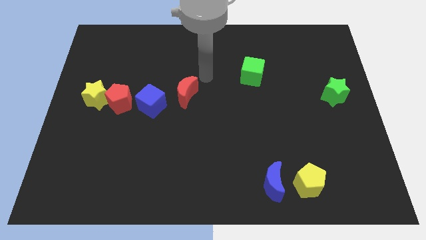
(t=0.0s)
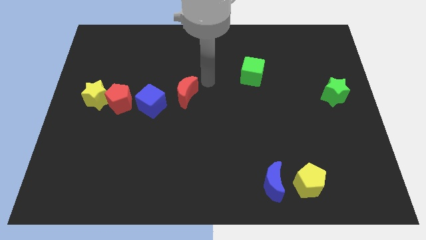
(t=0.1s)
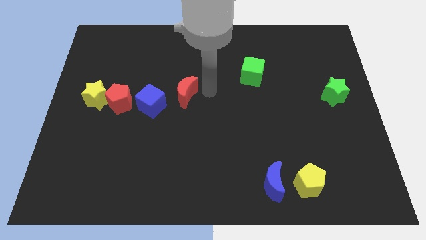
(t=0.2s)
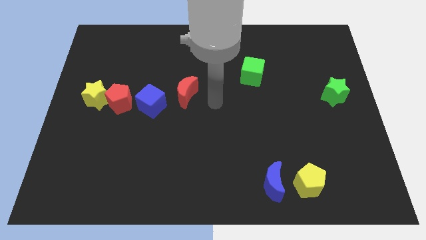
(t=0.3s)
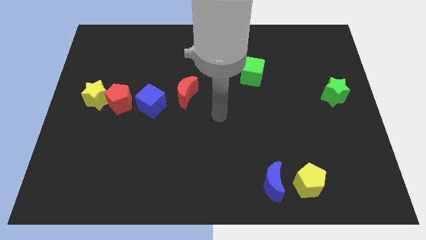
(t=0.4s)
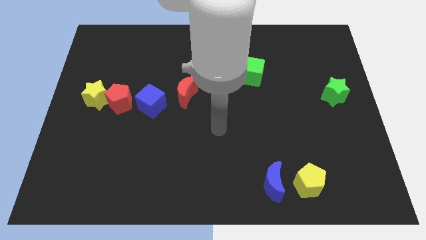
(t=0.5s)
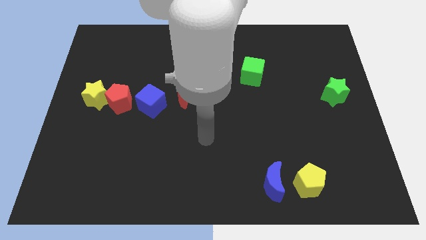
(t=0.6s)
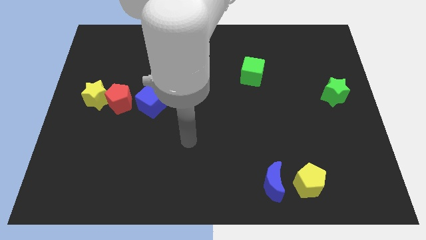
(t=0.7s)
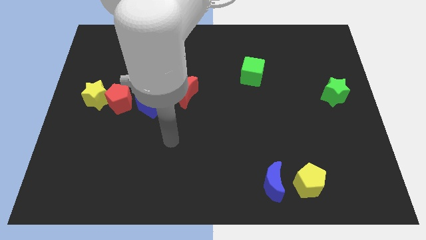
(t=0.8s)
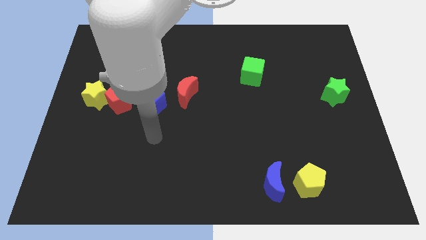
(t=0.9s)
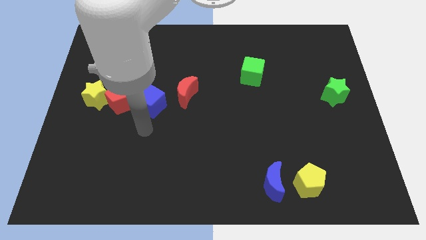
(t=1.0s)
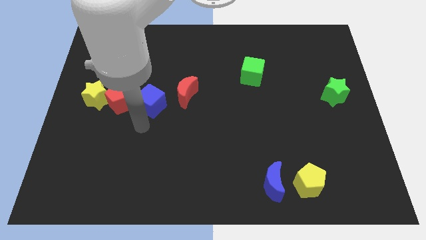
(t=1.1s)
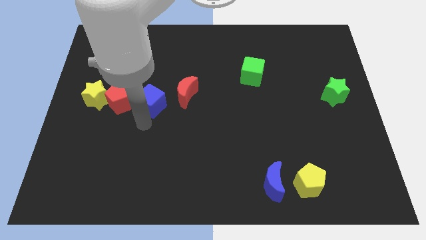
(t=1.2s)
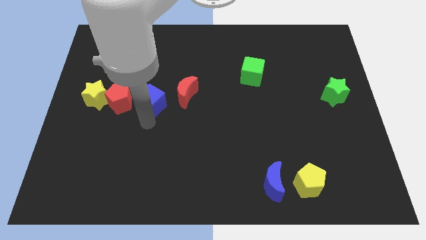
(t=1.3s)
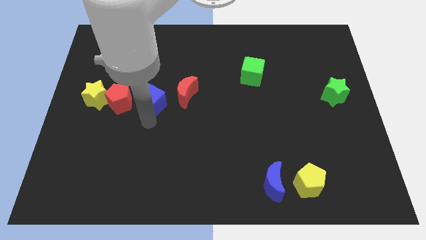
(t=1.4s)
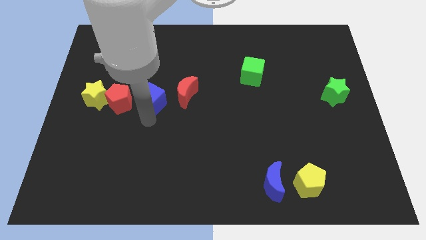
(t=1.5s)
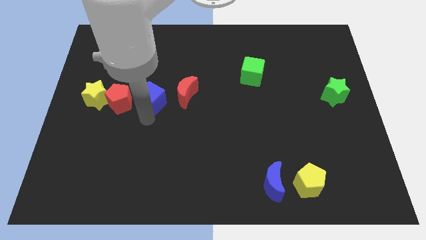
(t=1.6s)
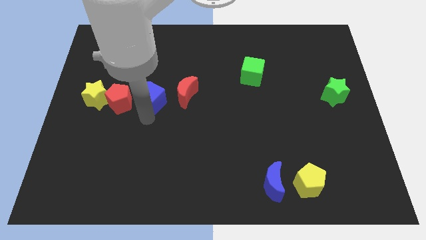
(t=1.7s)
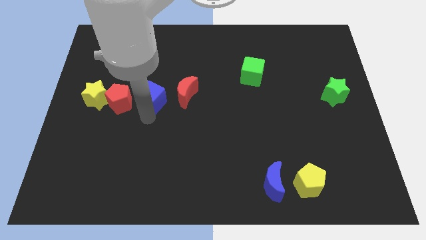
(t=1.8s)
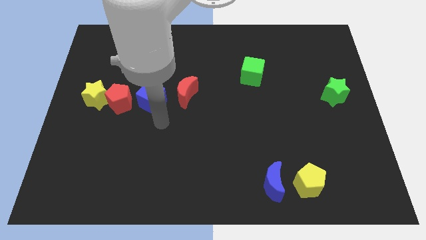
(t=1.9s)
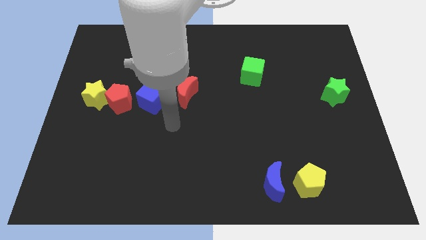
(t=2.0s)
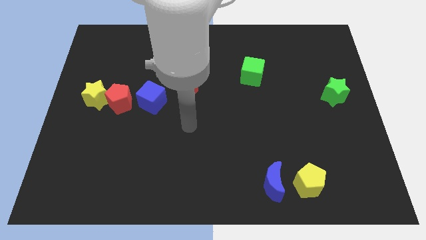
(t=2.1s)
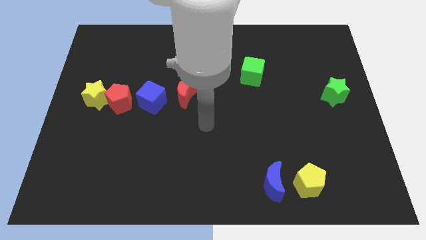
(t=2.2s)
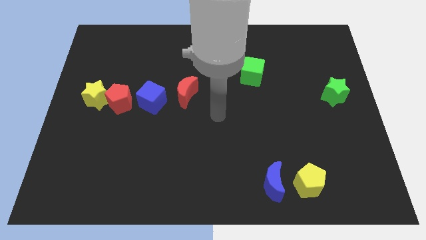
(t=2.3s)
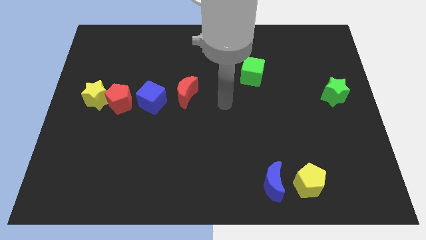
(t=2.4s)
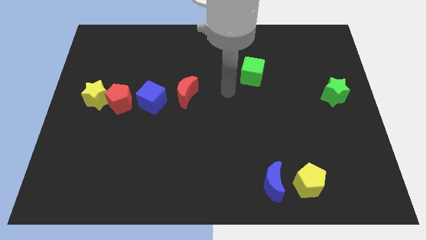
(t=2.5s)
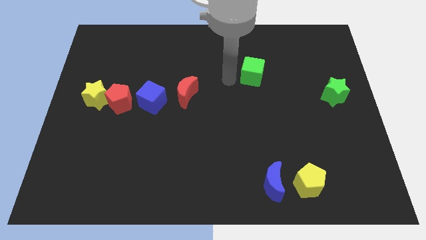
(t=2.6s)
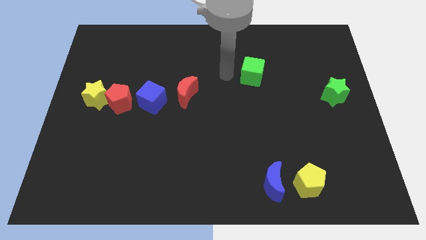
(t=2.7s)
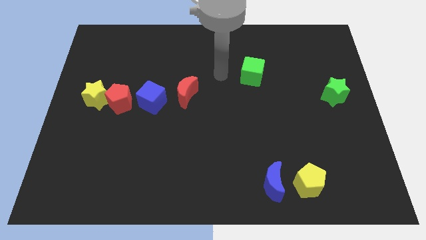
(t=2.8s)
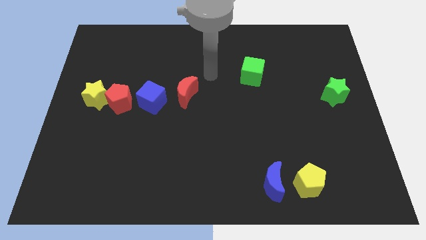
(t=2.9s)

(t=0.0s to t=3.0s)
move away from the red moon

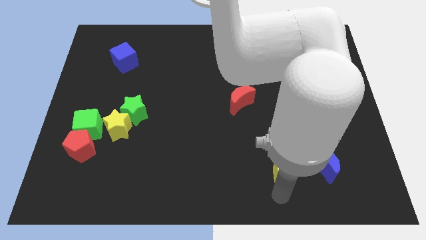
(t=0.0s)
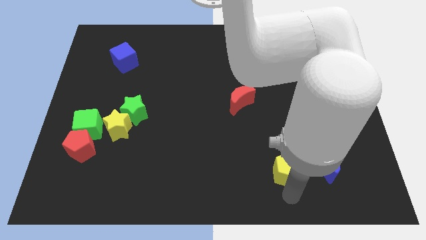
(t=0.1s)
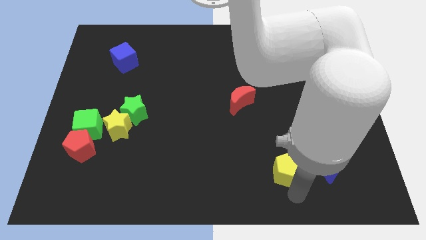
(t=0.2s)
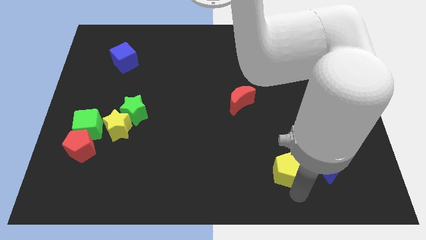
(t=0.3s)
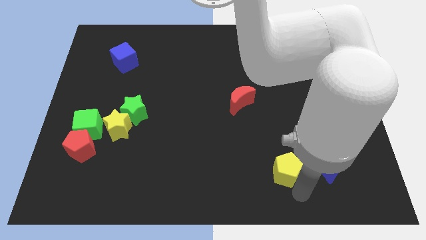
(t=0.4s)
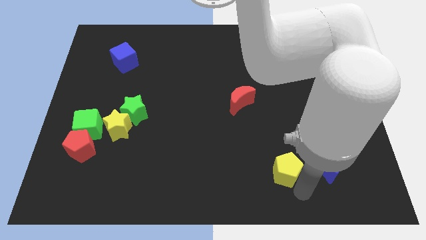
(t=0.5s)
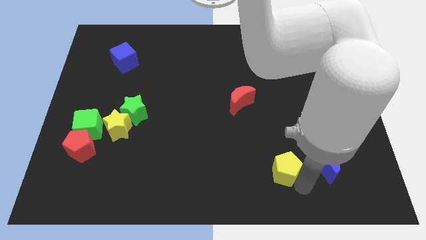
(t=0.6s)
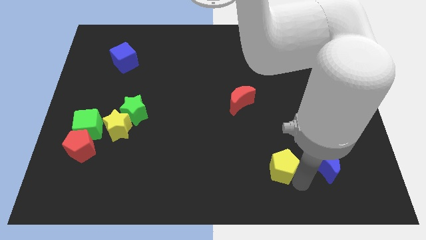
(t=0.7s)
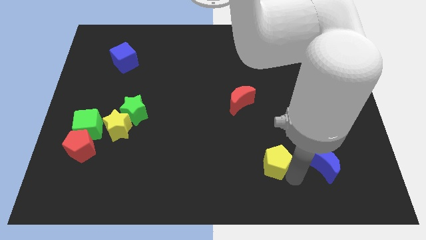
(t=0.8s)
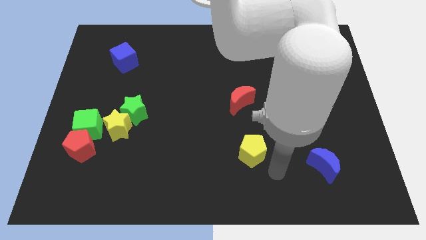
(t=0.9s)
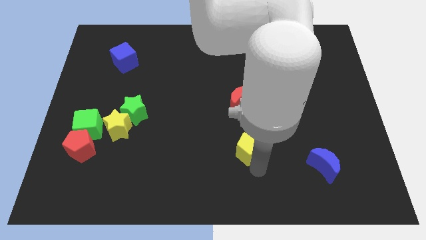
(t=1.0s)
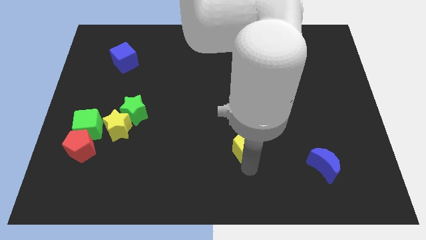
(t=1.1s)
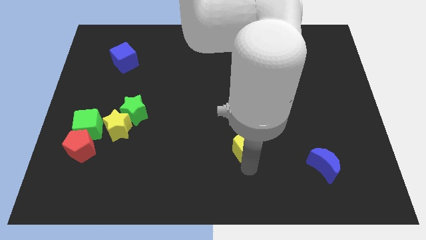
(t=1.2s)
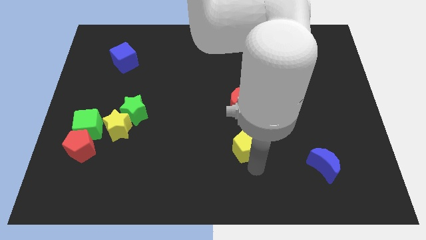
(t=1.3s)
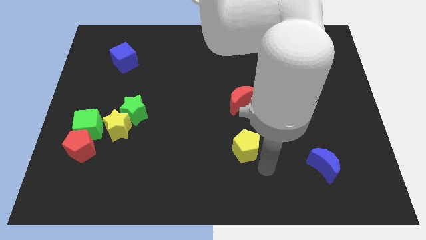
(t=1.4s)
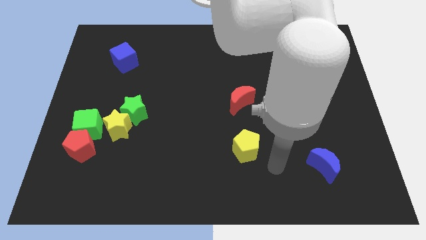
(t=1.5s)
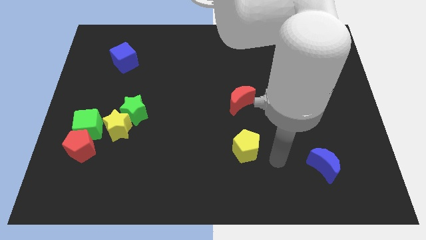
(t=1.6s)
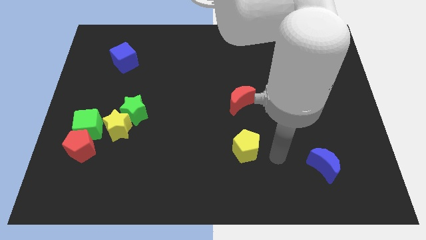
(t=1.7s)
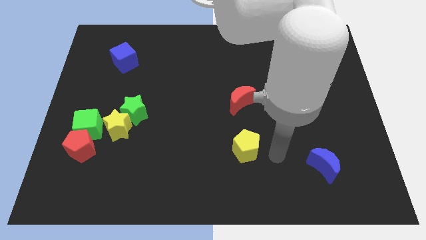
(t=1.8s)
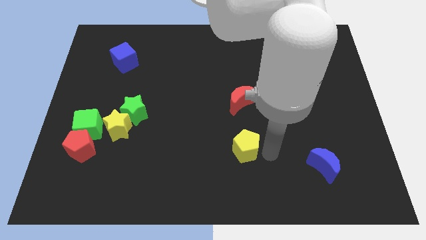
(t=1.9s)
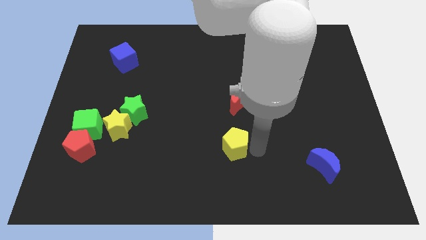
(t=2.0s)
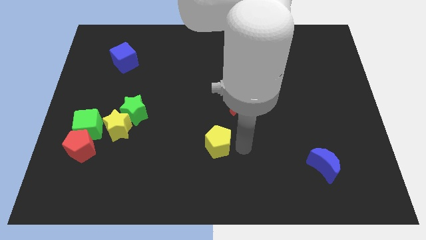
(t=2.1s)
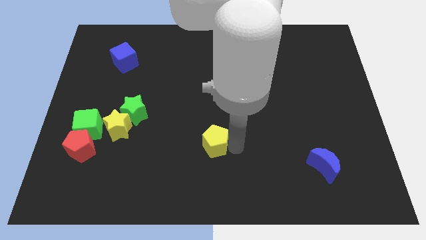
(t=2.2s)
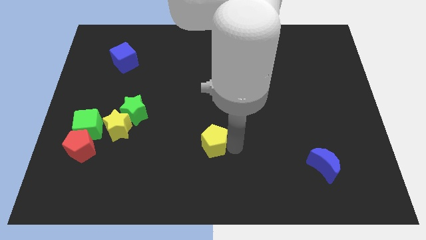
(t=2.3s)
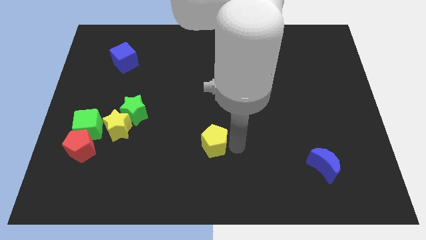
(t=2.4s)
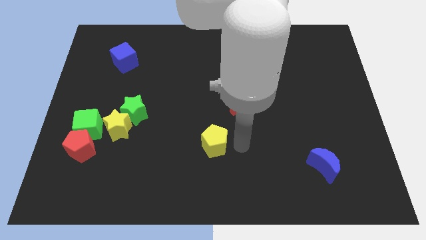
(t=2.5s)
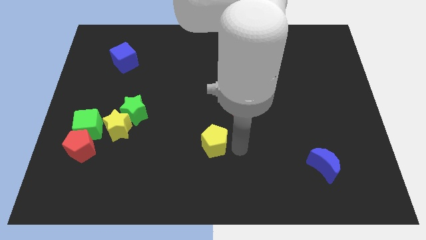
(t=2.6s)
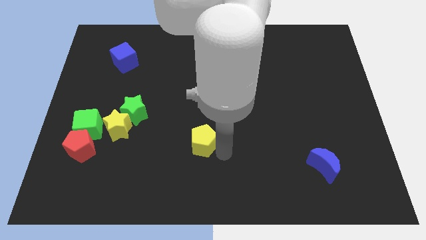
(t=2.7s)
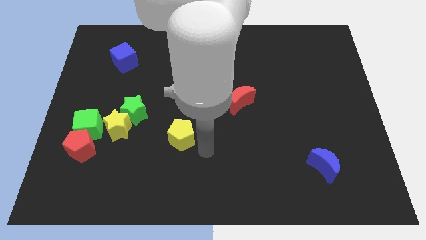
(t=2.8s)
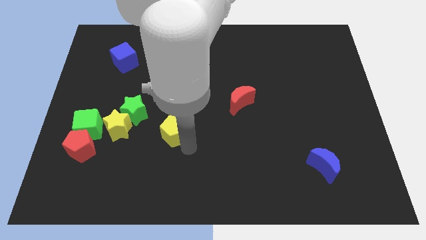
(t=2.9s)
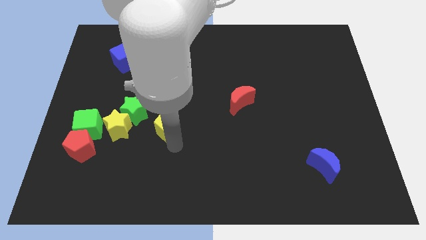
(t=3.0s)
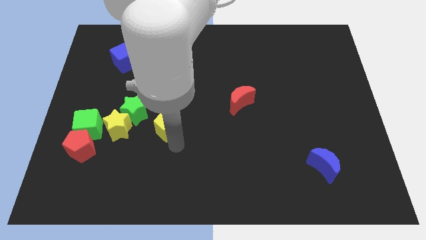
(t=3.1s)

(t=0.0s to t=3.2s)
drag the yellow pentagon bottom right to green star

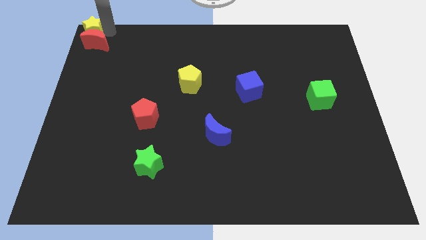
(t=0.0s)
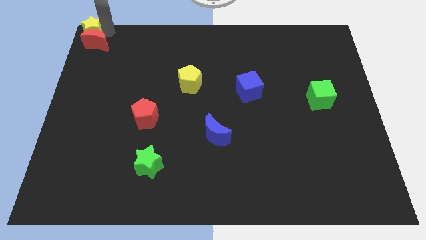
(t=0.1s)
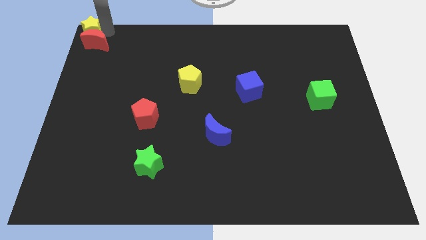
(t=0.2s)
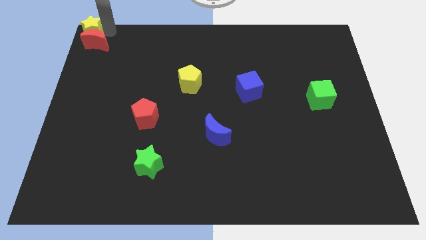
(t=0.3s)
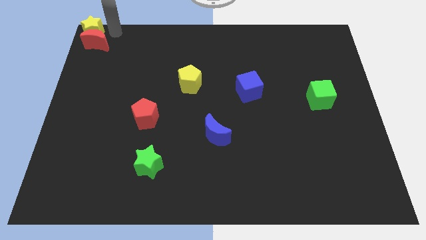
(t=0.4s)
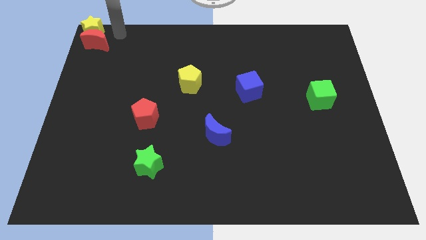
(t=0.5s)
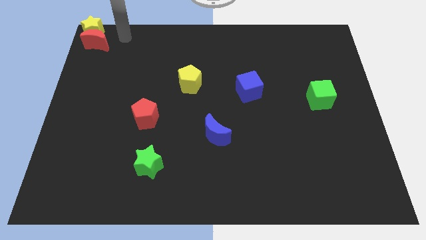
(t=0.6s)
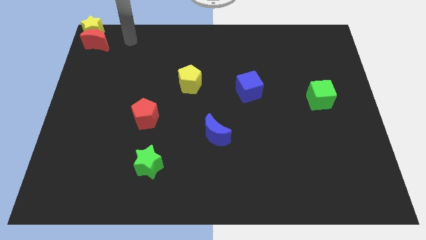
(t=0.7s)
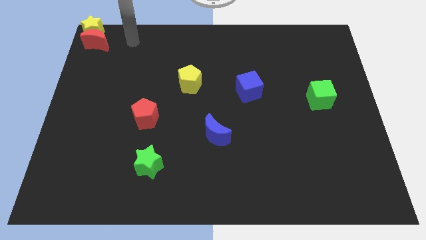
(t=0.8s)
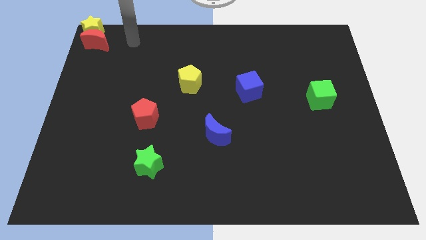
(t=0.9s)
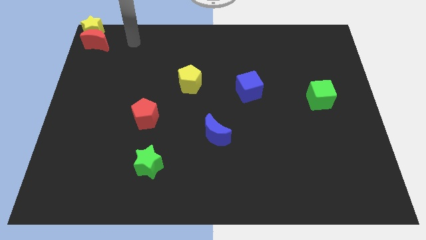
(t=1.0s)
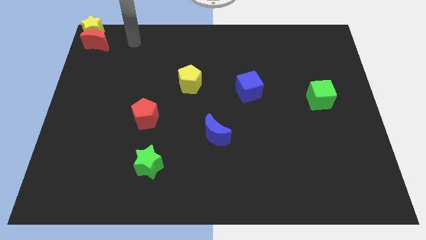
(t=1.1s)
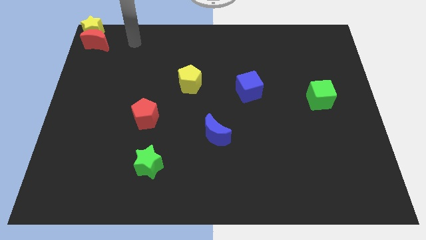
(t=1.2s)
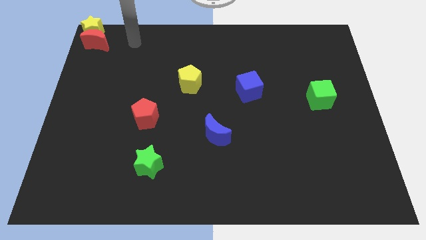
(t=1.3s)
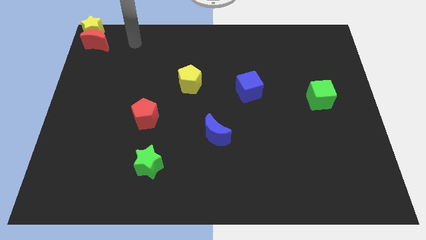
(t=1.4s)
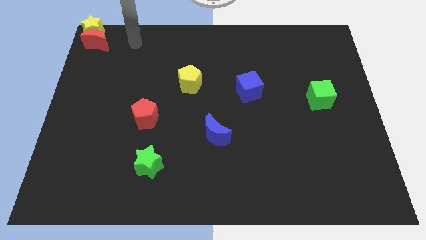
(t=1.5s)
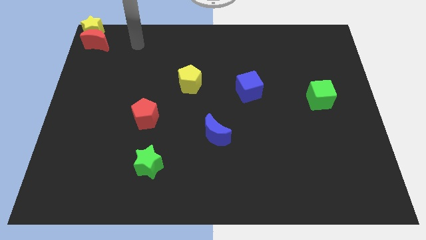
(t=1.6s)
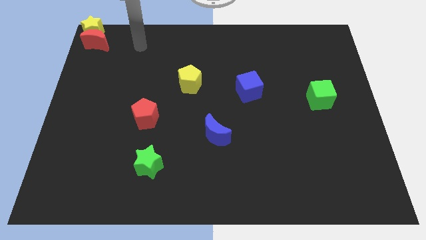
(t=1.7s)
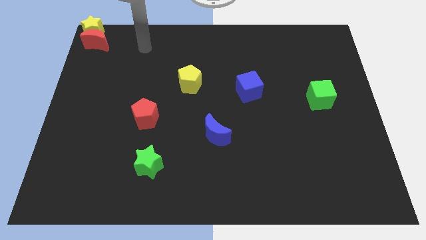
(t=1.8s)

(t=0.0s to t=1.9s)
move your arm away from the yellow star

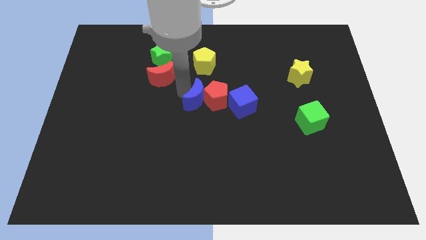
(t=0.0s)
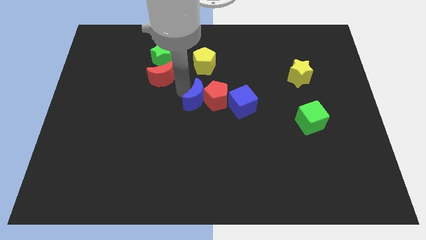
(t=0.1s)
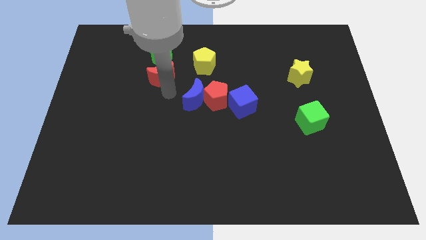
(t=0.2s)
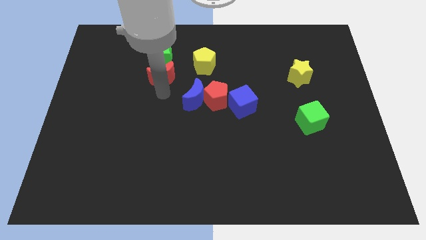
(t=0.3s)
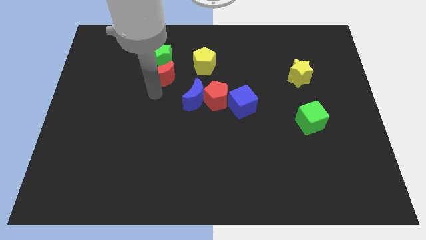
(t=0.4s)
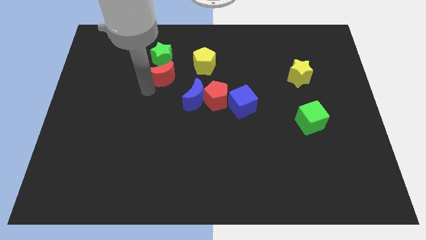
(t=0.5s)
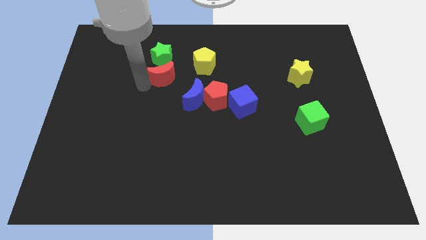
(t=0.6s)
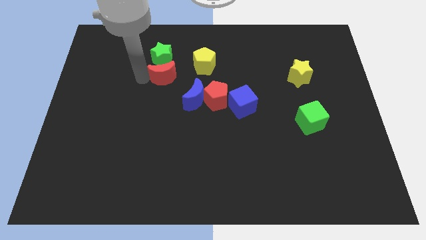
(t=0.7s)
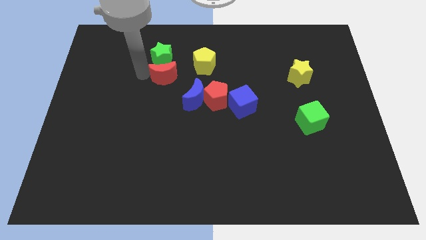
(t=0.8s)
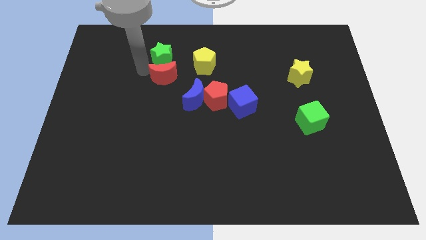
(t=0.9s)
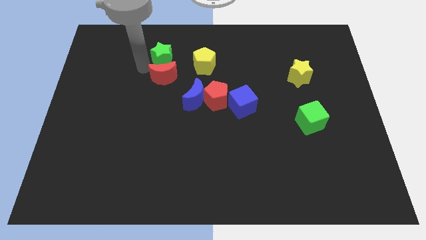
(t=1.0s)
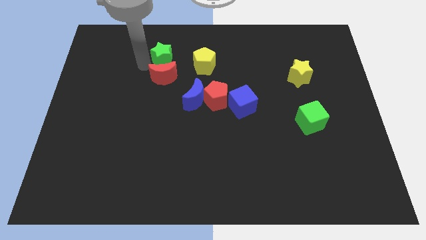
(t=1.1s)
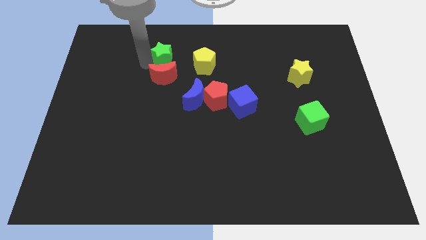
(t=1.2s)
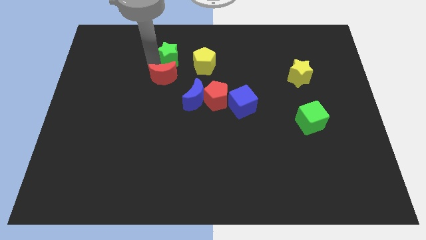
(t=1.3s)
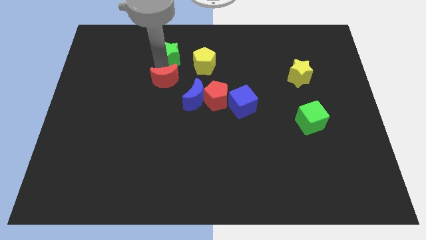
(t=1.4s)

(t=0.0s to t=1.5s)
move your arm to the left of the green star
